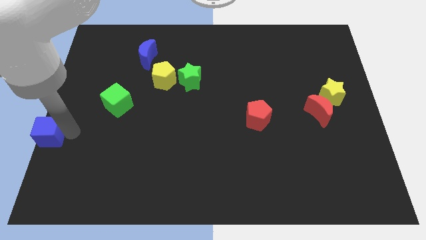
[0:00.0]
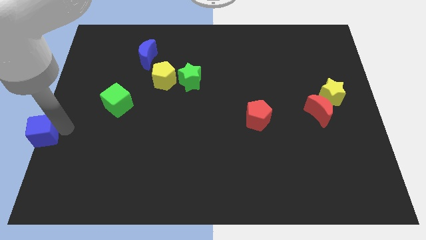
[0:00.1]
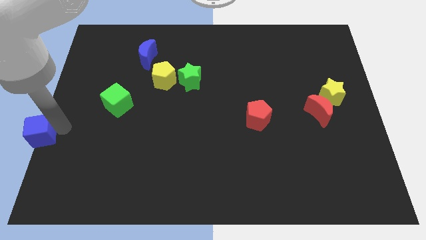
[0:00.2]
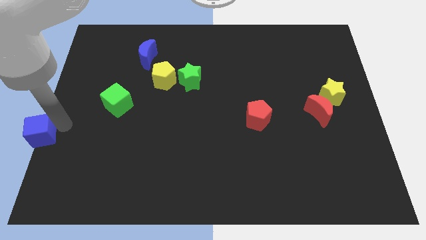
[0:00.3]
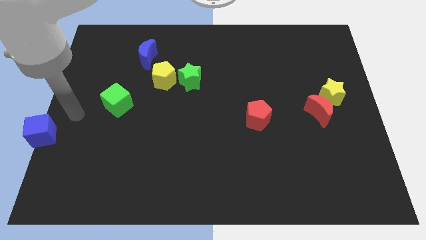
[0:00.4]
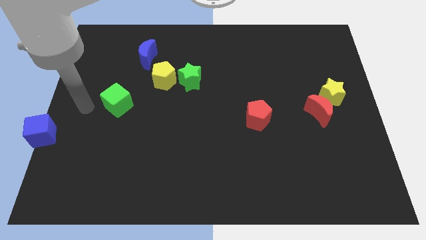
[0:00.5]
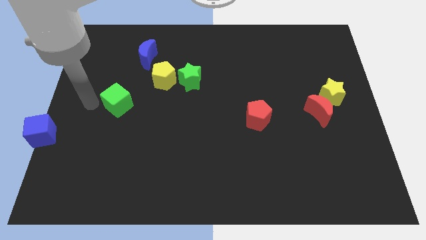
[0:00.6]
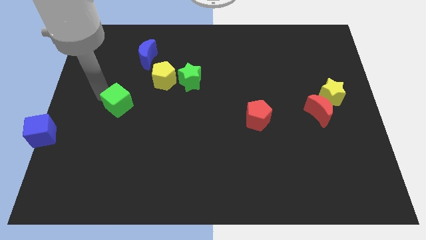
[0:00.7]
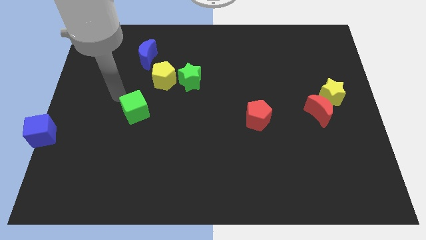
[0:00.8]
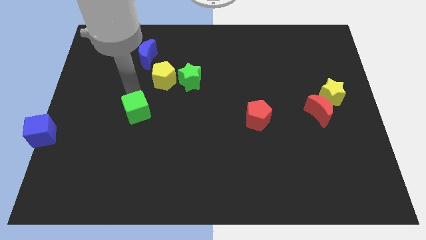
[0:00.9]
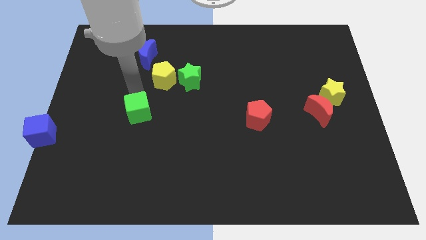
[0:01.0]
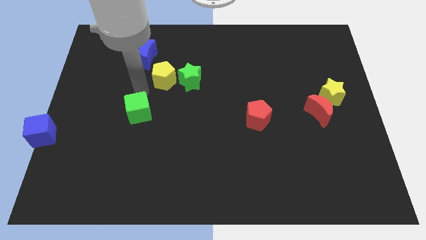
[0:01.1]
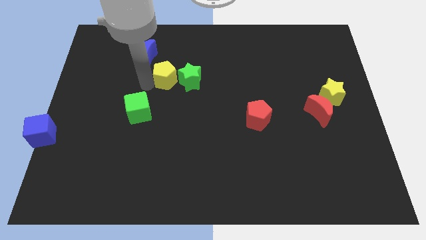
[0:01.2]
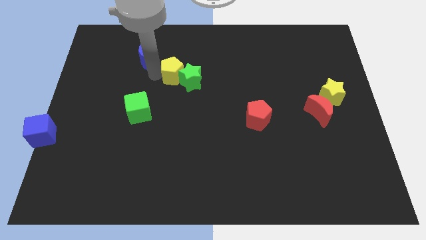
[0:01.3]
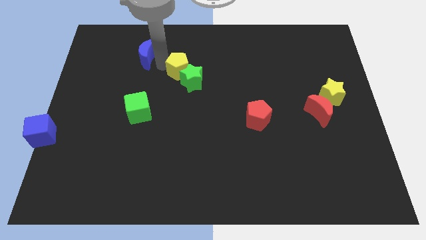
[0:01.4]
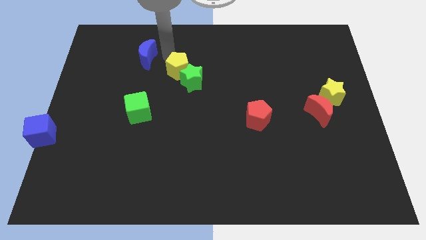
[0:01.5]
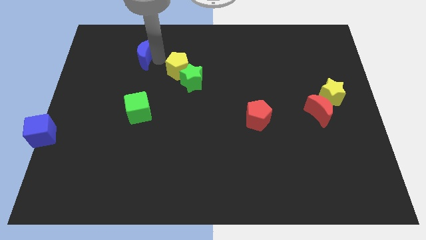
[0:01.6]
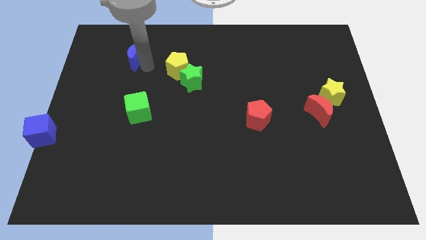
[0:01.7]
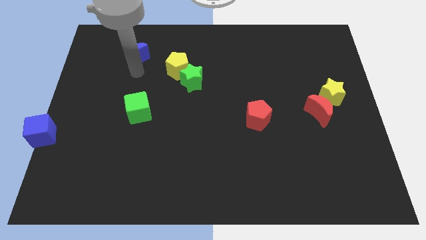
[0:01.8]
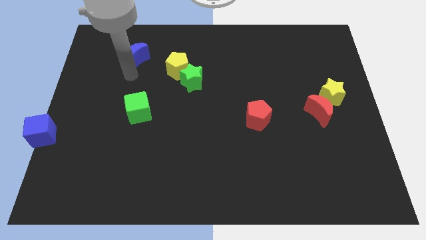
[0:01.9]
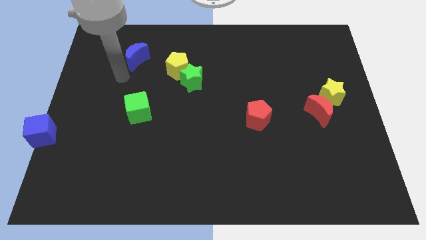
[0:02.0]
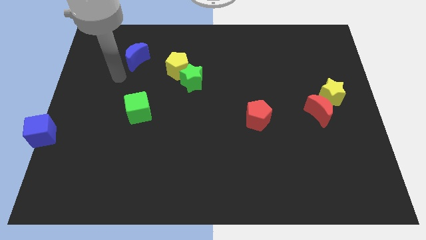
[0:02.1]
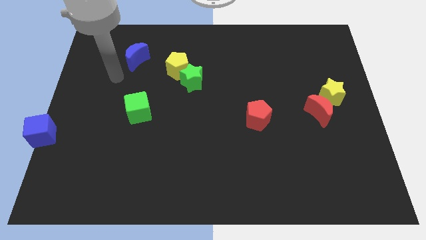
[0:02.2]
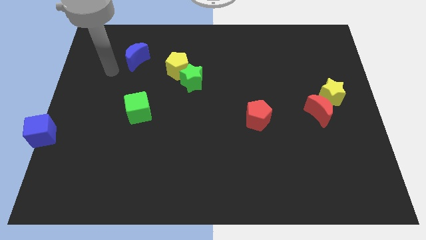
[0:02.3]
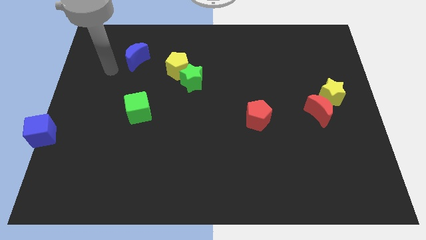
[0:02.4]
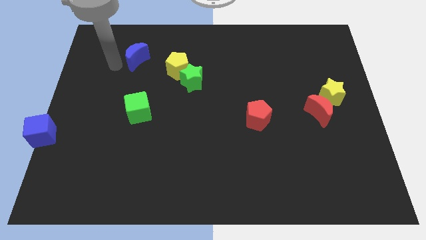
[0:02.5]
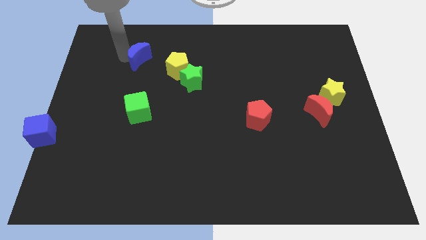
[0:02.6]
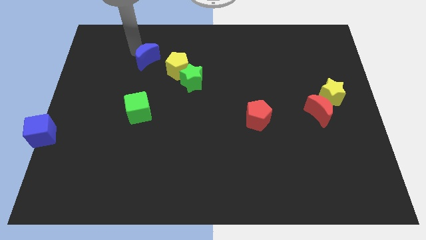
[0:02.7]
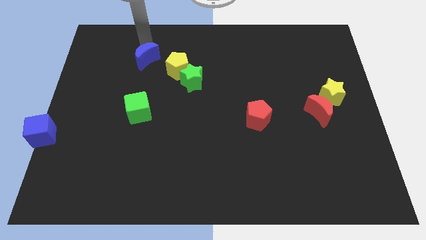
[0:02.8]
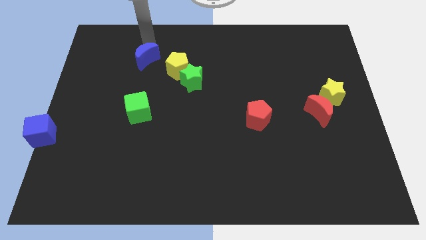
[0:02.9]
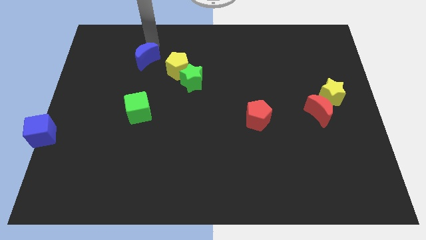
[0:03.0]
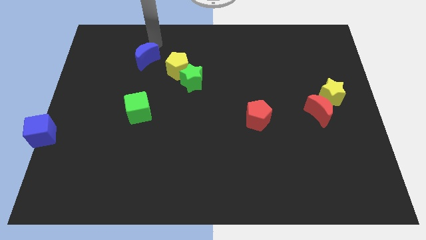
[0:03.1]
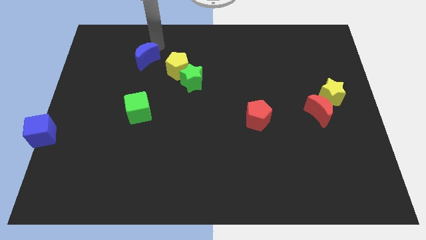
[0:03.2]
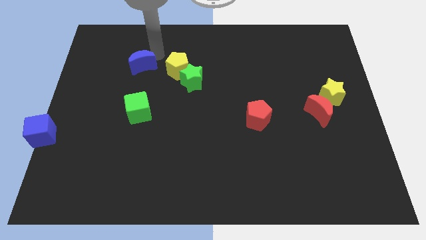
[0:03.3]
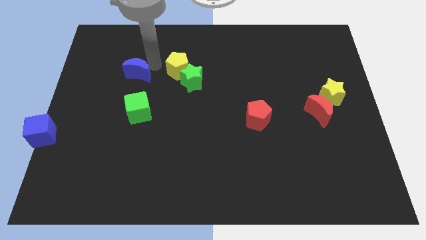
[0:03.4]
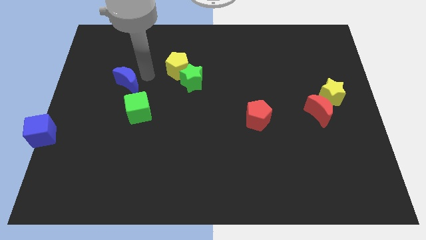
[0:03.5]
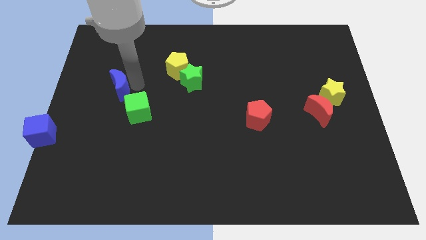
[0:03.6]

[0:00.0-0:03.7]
adjust yellow pentagon and the green star diagonal to green cube and the blue moon

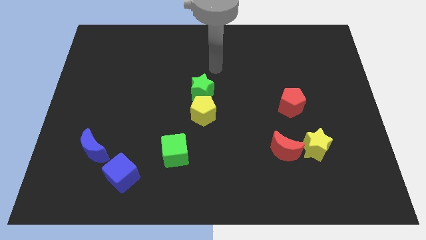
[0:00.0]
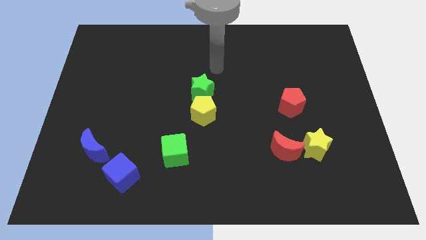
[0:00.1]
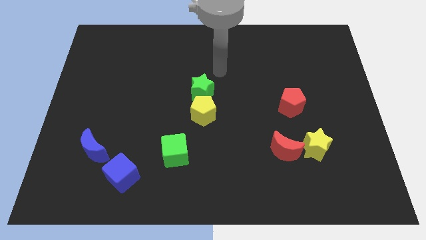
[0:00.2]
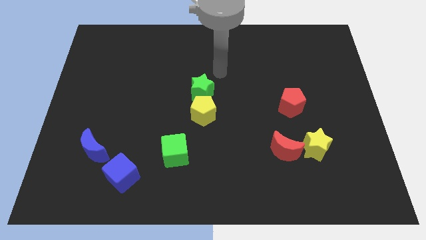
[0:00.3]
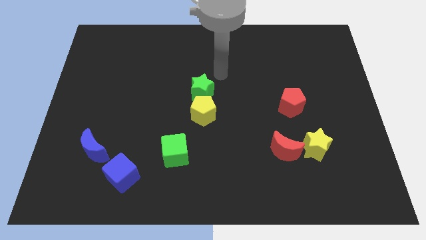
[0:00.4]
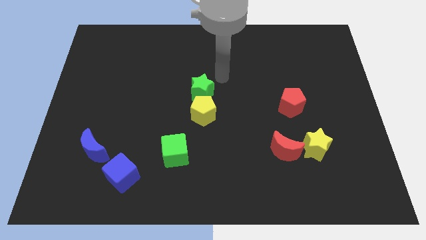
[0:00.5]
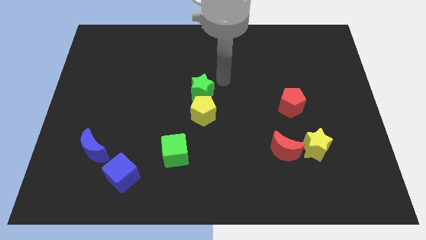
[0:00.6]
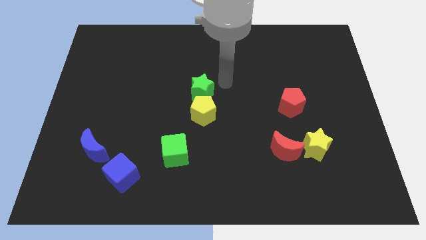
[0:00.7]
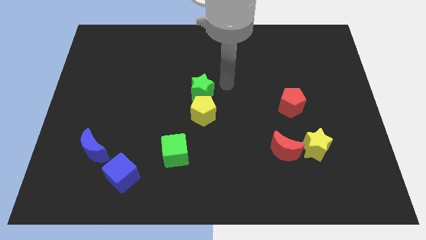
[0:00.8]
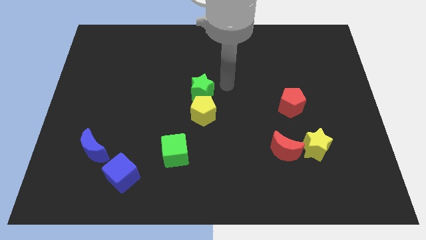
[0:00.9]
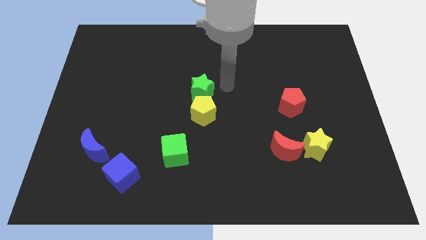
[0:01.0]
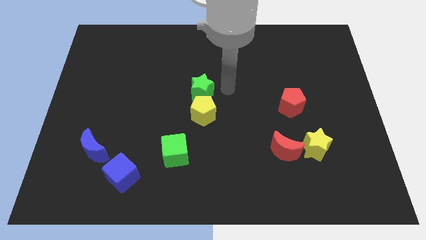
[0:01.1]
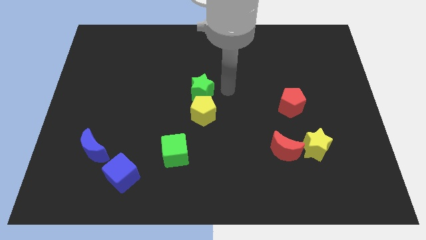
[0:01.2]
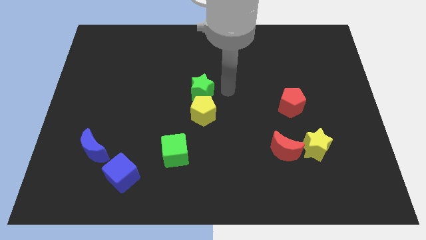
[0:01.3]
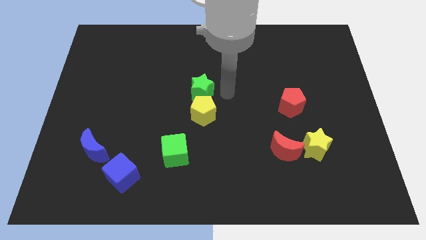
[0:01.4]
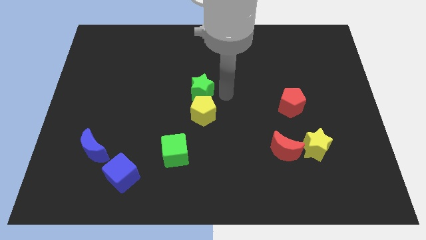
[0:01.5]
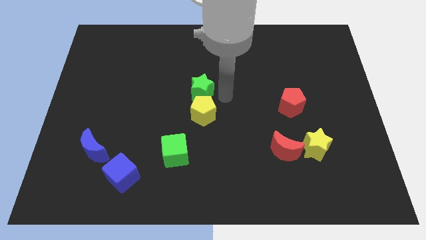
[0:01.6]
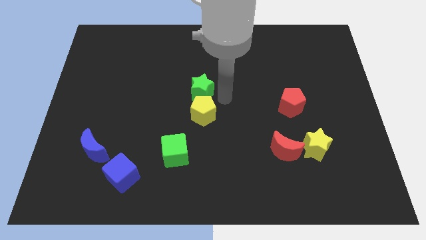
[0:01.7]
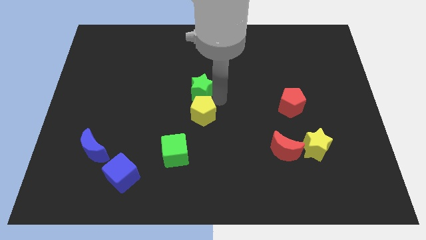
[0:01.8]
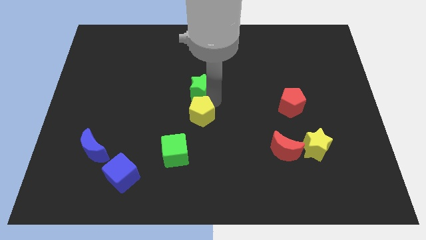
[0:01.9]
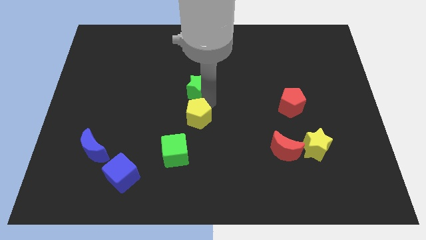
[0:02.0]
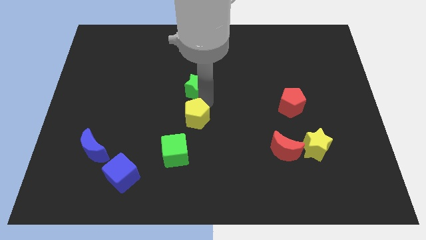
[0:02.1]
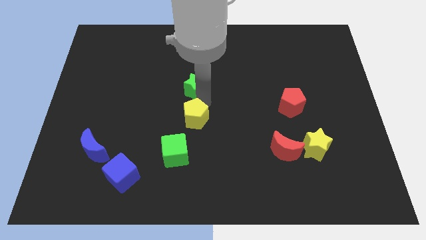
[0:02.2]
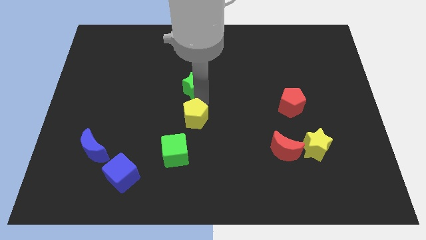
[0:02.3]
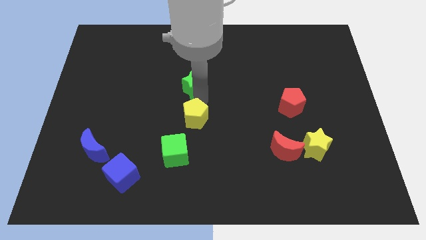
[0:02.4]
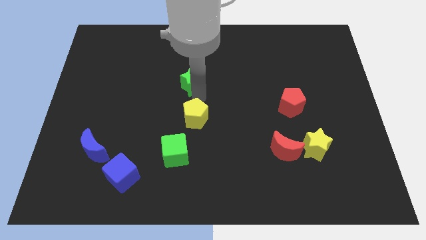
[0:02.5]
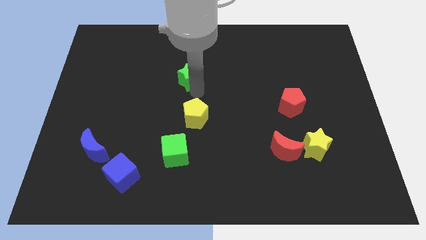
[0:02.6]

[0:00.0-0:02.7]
separate the green star away from the yellow pentagon

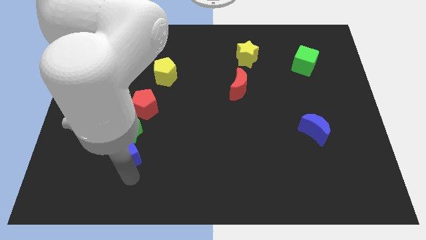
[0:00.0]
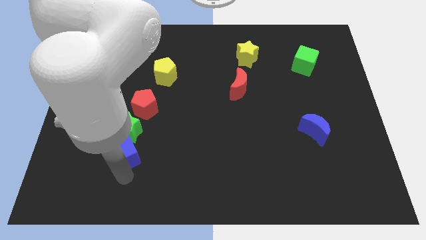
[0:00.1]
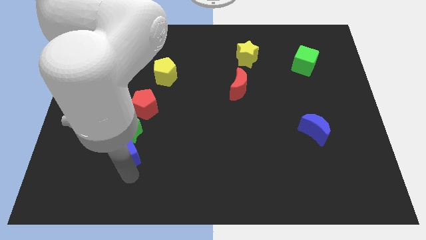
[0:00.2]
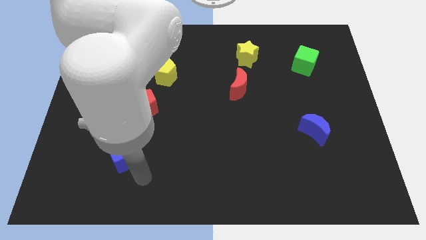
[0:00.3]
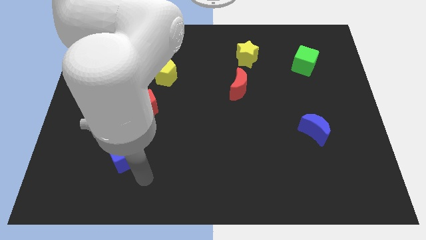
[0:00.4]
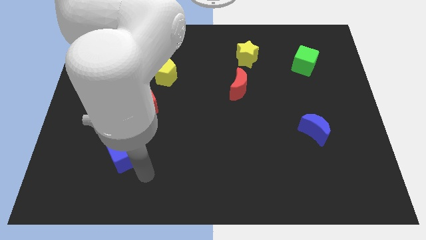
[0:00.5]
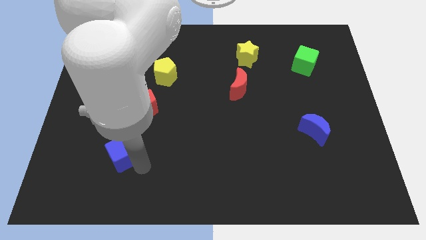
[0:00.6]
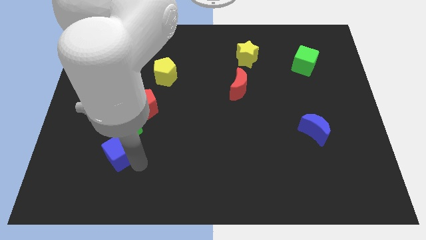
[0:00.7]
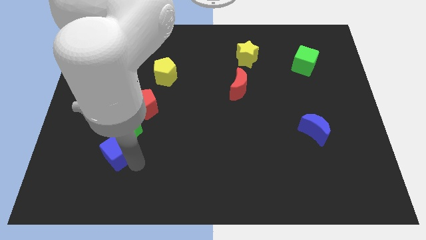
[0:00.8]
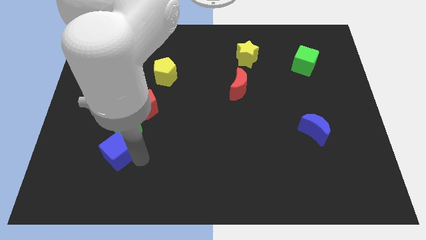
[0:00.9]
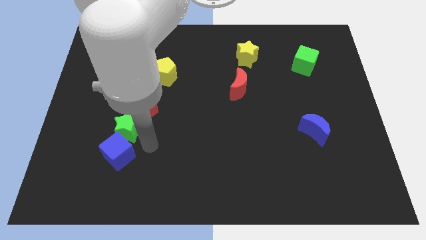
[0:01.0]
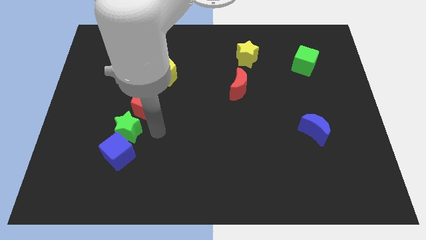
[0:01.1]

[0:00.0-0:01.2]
push the blue cube slightly to the top

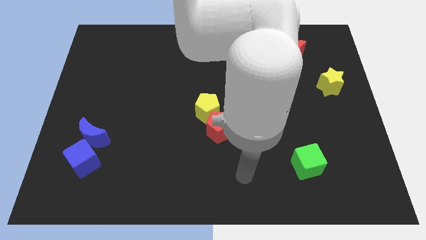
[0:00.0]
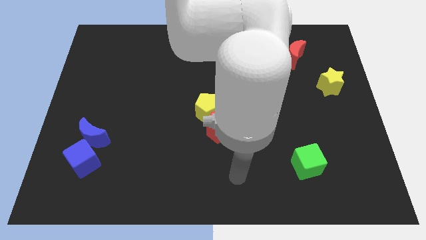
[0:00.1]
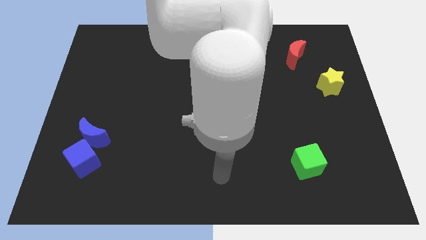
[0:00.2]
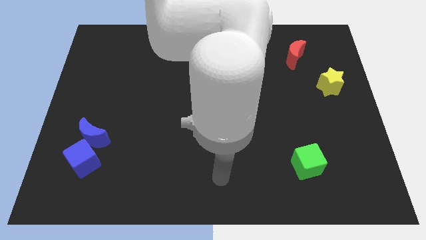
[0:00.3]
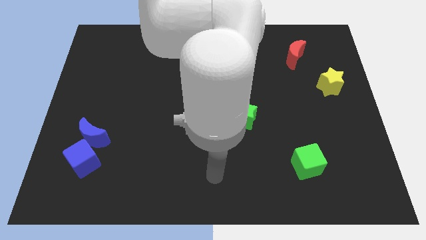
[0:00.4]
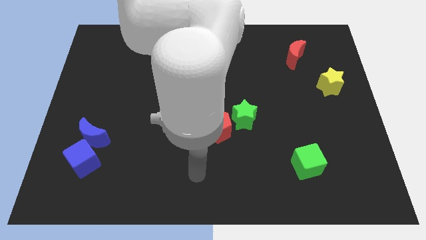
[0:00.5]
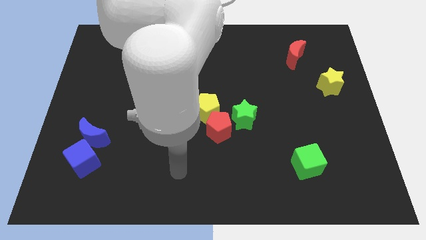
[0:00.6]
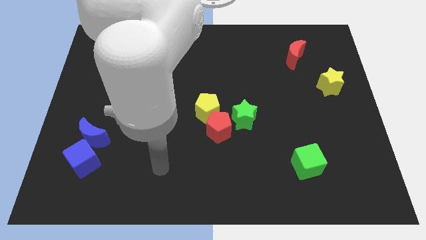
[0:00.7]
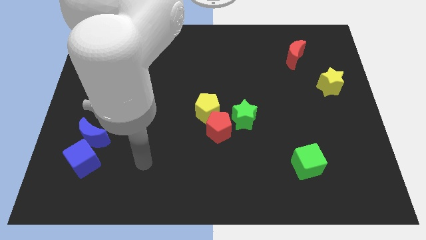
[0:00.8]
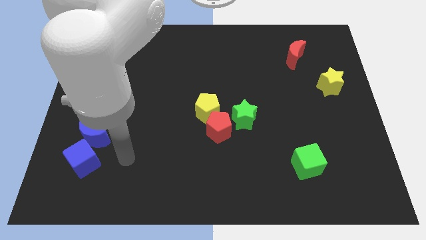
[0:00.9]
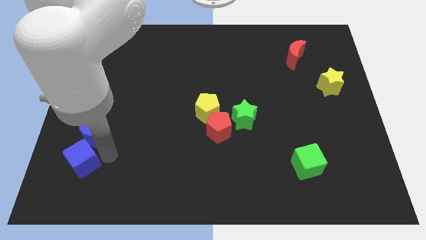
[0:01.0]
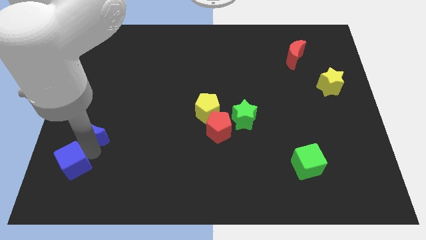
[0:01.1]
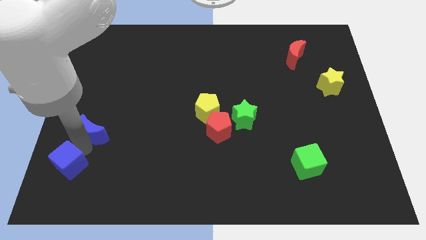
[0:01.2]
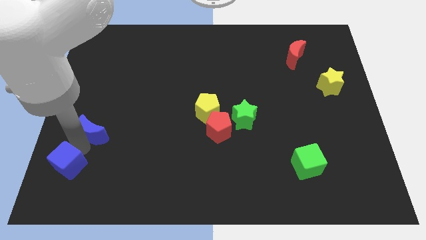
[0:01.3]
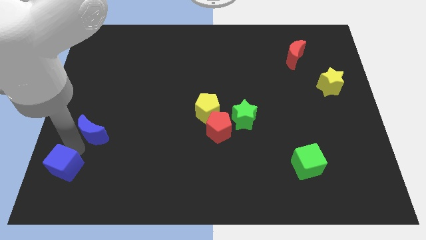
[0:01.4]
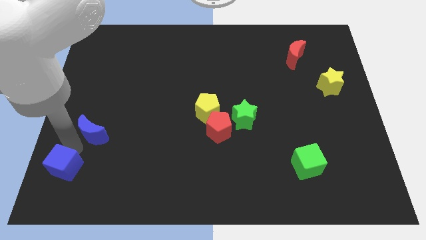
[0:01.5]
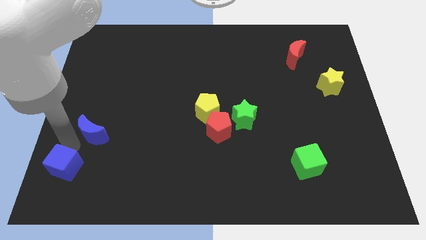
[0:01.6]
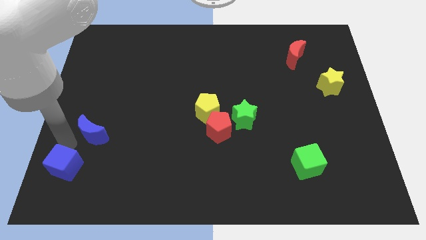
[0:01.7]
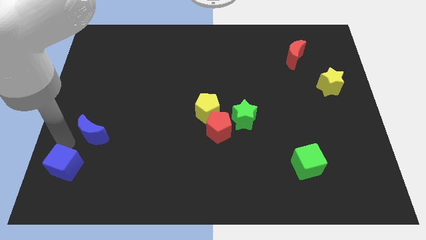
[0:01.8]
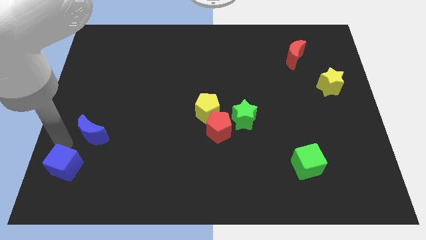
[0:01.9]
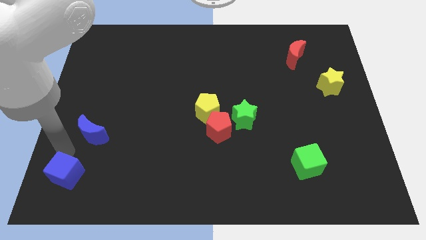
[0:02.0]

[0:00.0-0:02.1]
separate the blue cube from the blue crescent
